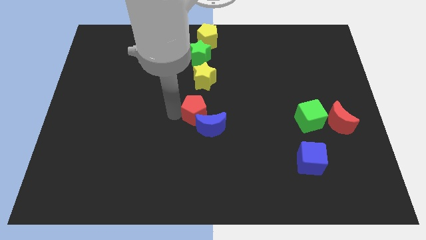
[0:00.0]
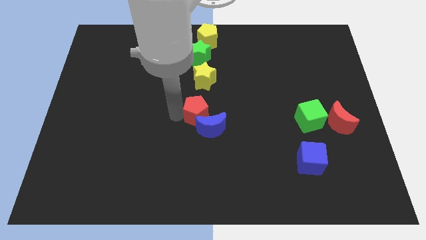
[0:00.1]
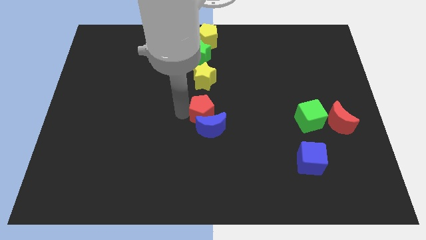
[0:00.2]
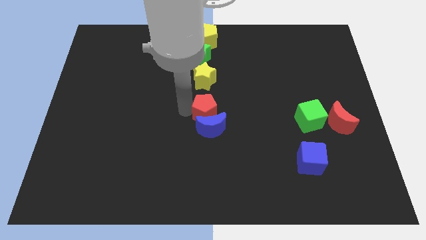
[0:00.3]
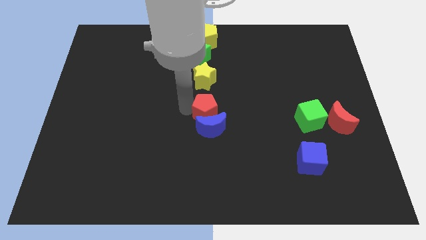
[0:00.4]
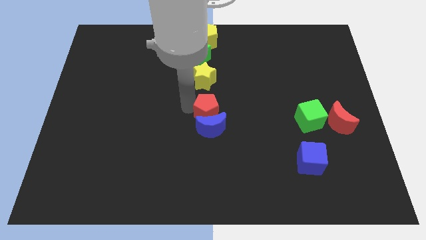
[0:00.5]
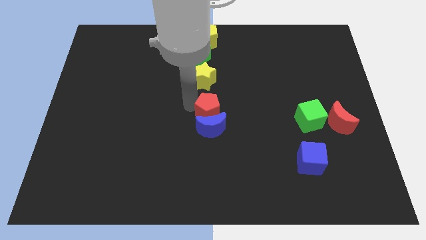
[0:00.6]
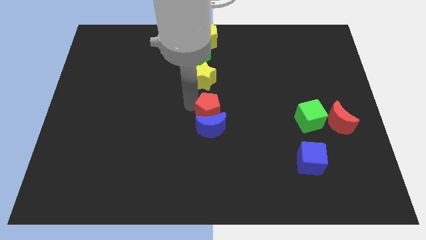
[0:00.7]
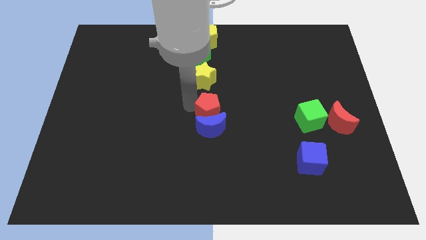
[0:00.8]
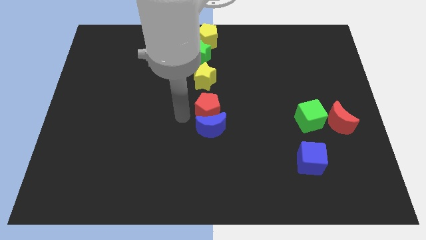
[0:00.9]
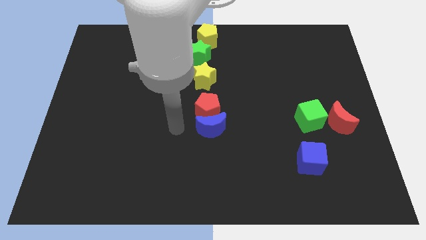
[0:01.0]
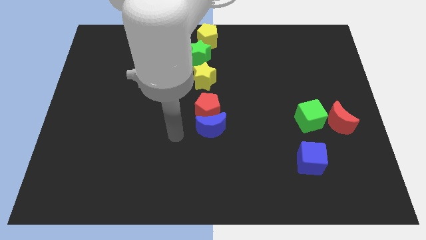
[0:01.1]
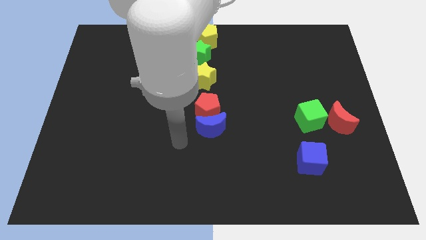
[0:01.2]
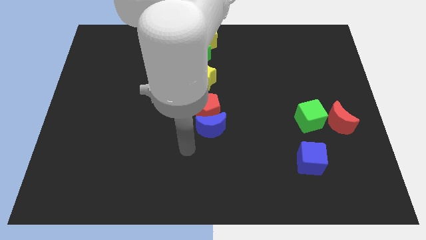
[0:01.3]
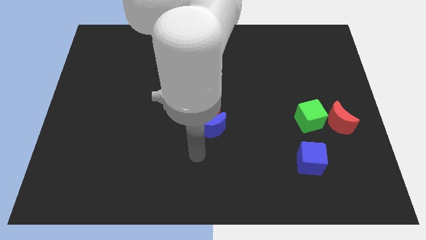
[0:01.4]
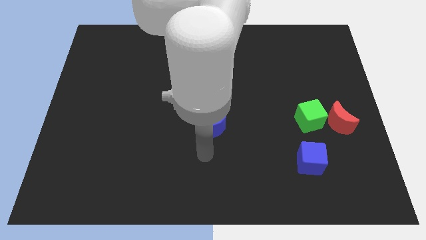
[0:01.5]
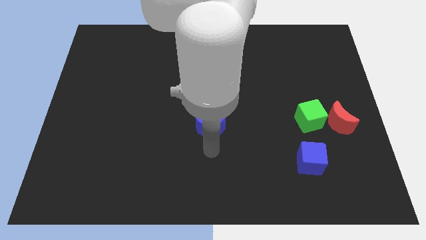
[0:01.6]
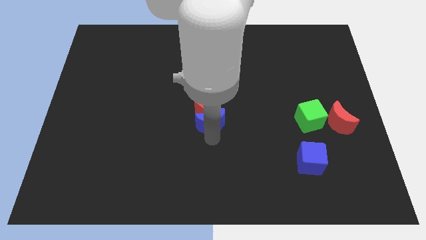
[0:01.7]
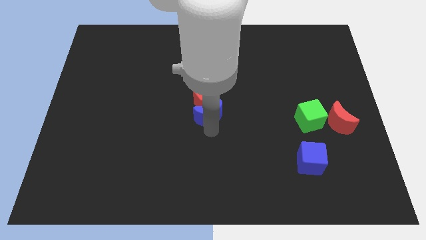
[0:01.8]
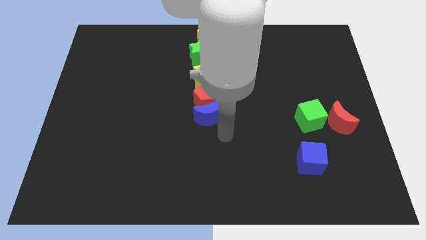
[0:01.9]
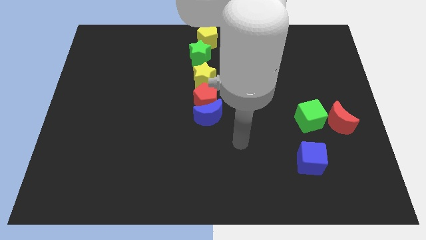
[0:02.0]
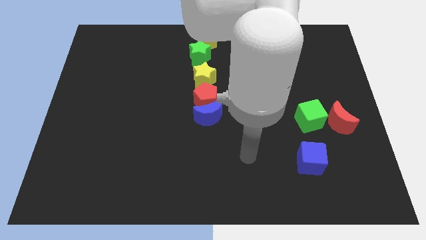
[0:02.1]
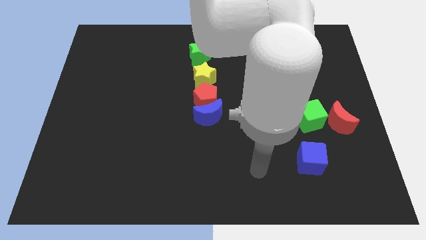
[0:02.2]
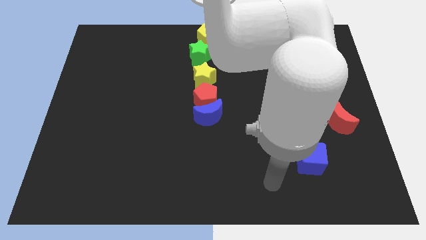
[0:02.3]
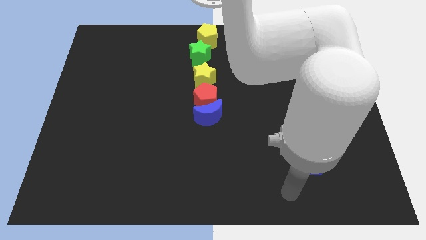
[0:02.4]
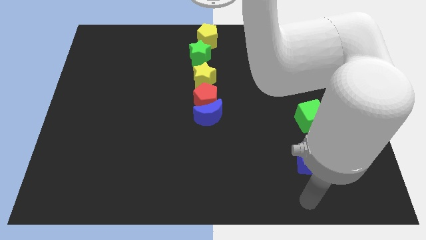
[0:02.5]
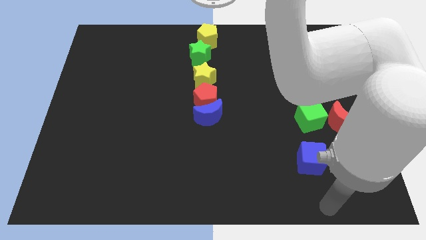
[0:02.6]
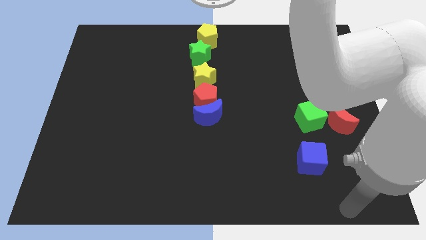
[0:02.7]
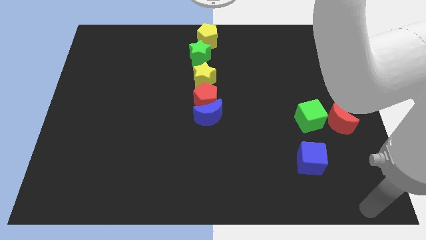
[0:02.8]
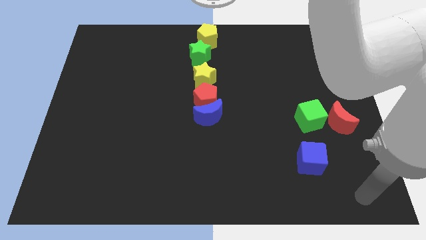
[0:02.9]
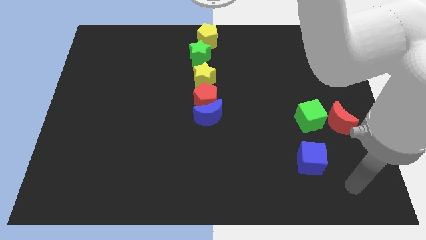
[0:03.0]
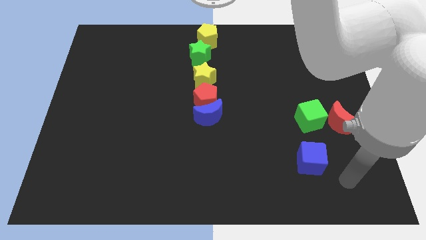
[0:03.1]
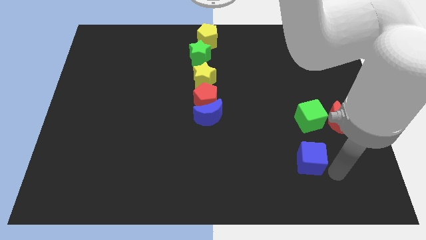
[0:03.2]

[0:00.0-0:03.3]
push the red pentagon and blue moon close to the bottom side of the yellow star

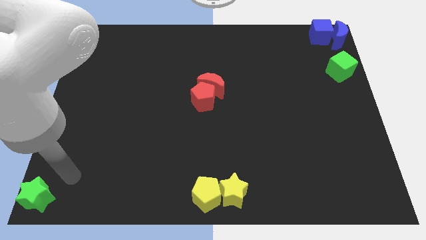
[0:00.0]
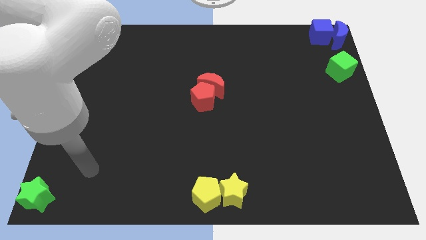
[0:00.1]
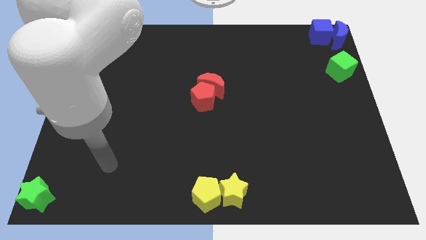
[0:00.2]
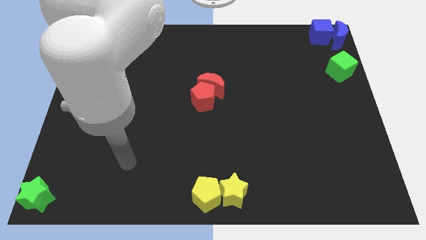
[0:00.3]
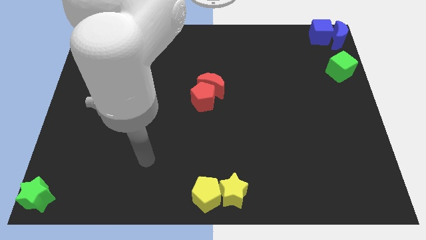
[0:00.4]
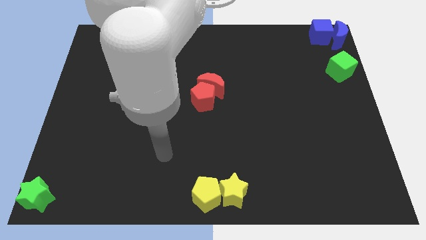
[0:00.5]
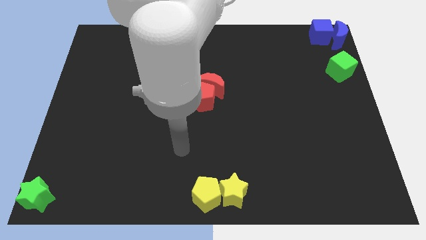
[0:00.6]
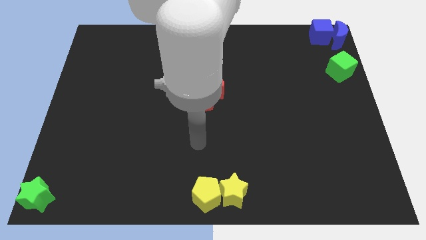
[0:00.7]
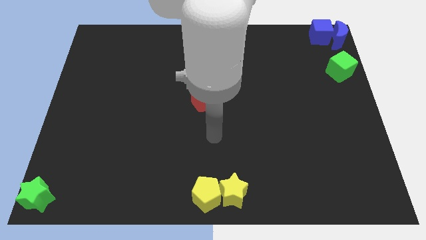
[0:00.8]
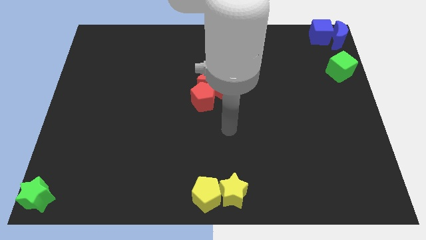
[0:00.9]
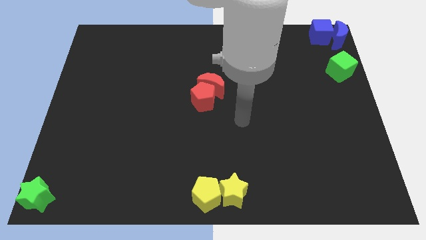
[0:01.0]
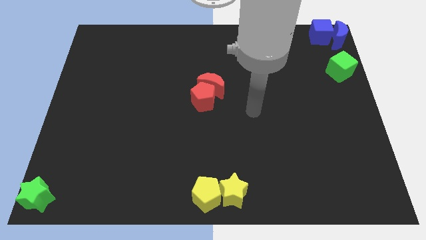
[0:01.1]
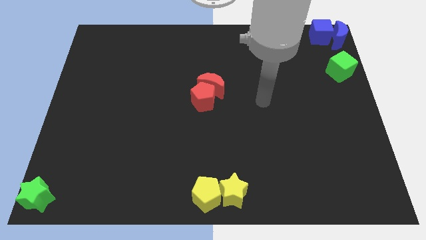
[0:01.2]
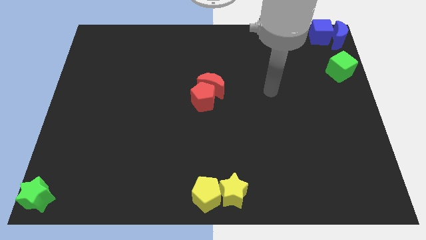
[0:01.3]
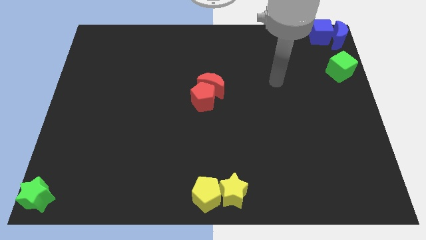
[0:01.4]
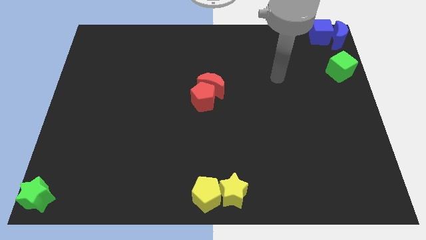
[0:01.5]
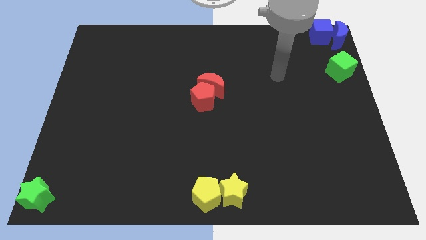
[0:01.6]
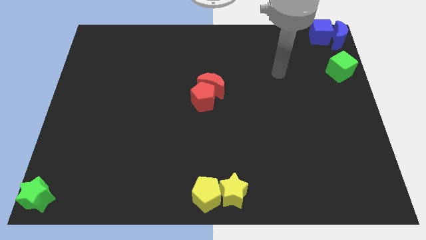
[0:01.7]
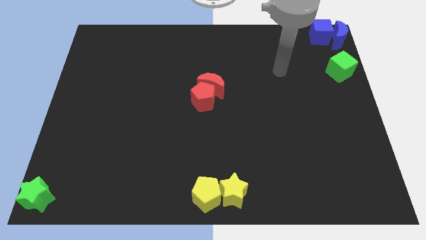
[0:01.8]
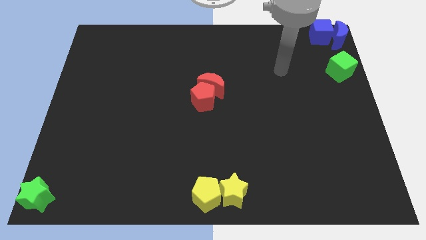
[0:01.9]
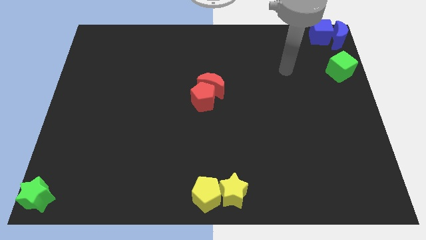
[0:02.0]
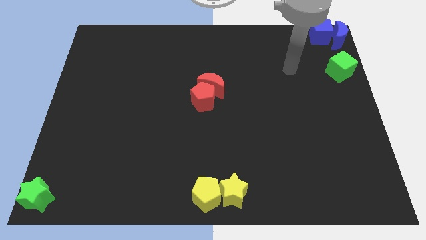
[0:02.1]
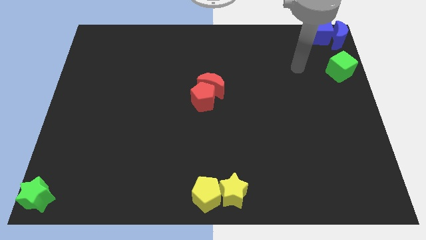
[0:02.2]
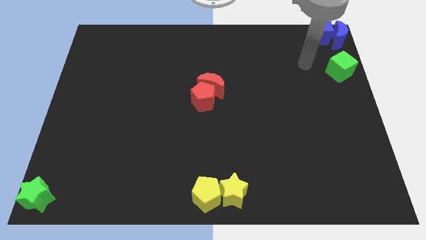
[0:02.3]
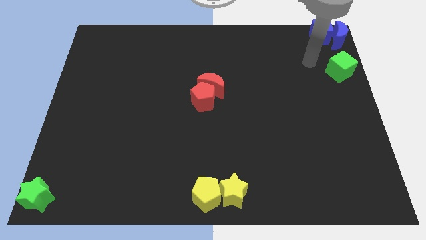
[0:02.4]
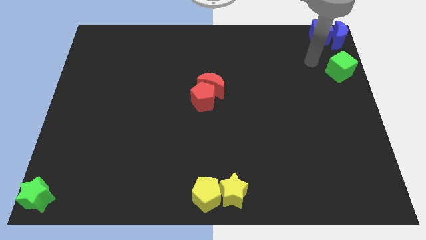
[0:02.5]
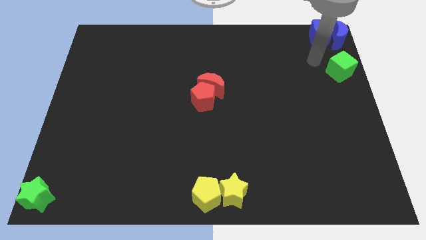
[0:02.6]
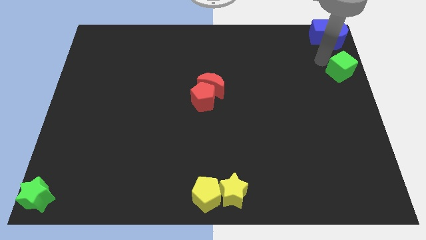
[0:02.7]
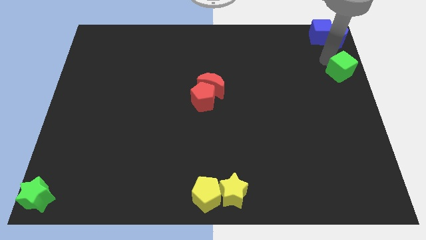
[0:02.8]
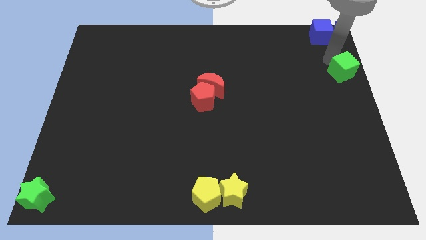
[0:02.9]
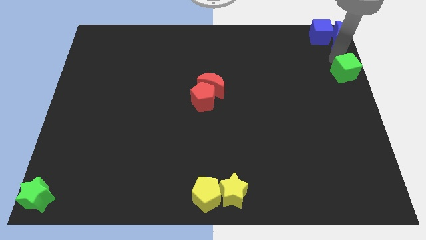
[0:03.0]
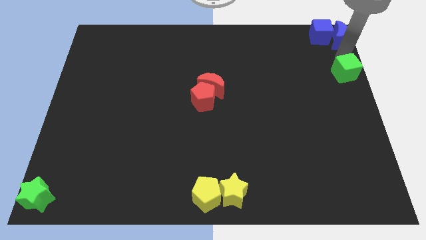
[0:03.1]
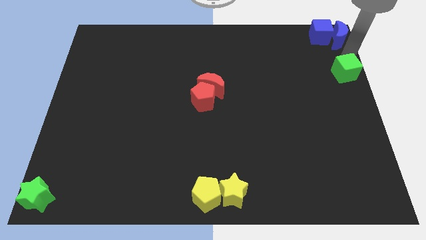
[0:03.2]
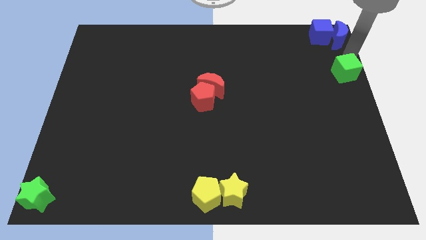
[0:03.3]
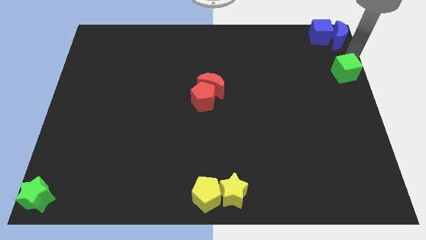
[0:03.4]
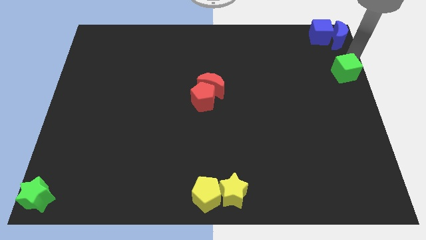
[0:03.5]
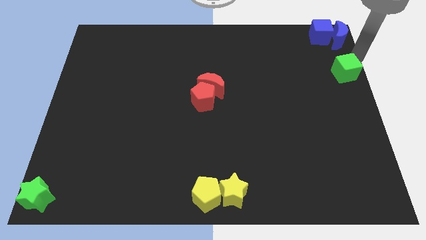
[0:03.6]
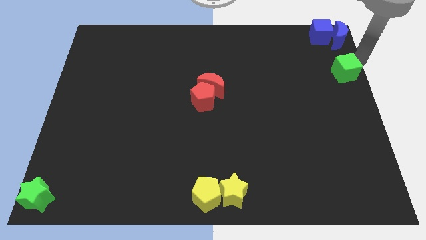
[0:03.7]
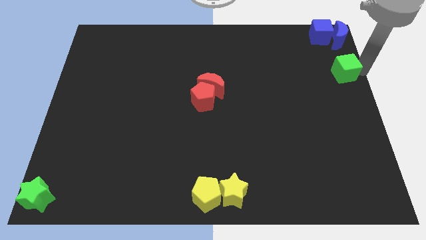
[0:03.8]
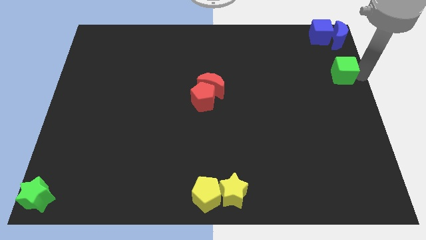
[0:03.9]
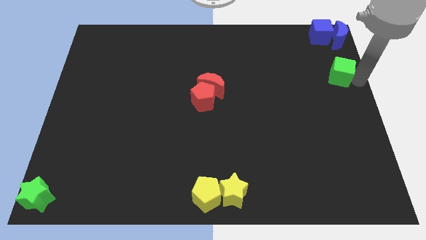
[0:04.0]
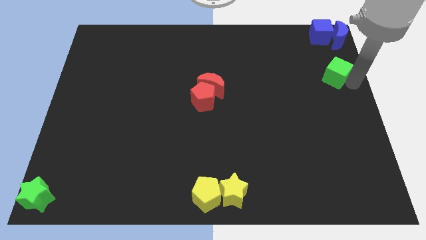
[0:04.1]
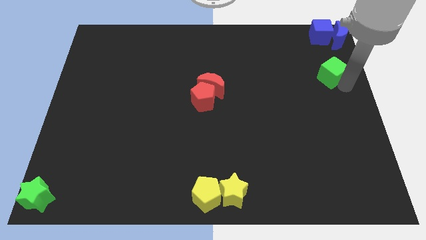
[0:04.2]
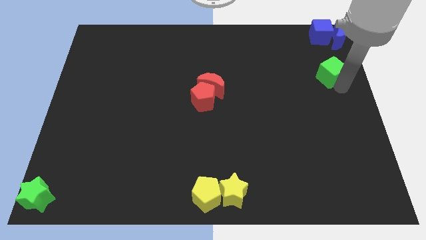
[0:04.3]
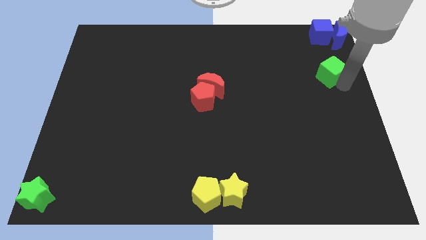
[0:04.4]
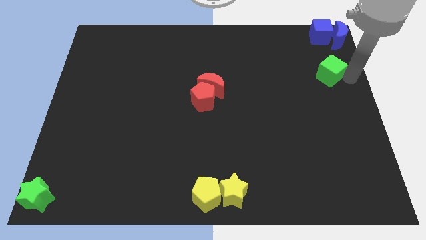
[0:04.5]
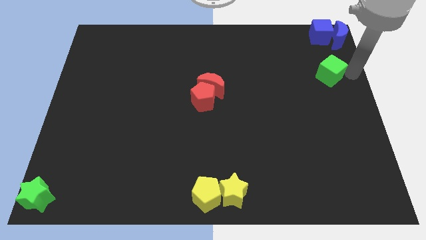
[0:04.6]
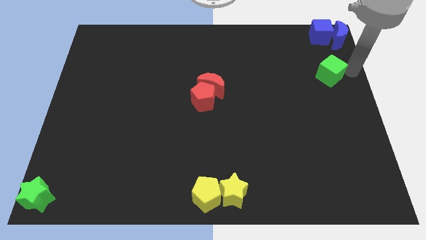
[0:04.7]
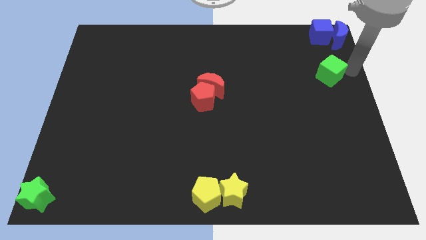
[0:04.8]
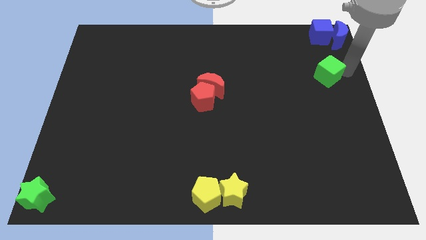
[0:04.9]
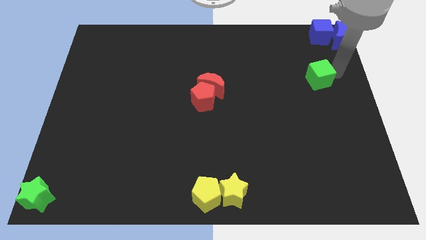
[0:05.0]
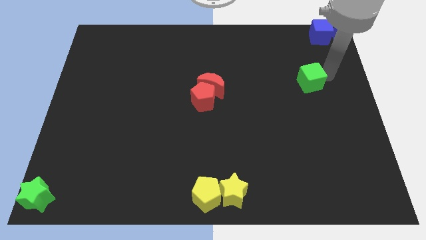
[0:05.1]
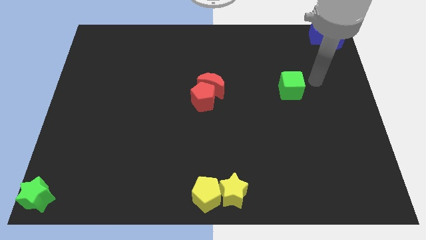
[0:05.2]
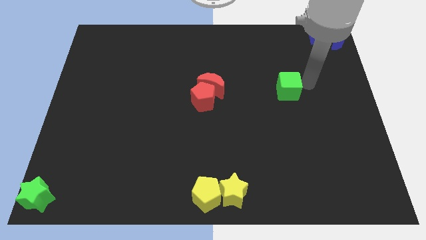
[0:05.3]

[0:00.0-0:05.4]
slide the green cube diagonally to the bottom left of the blue blocks

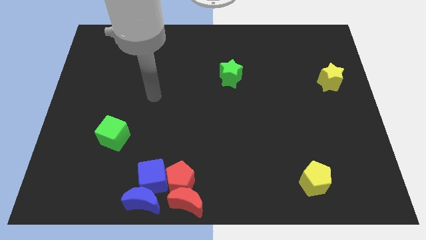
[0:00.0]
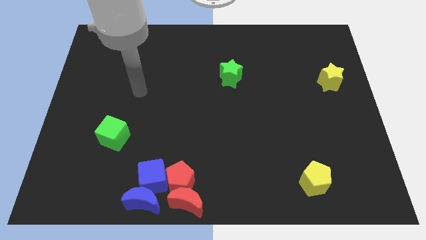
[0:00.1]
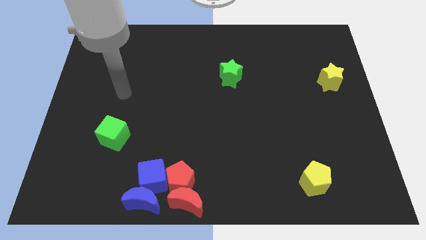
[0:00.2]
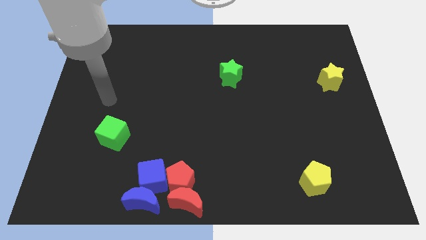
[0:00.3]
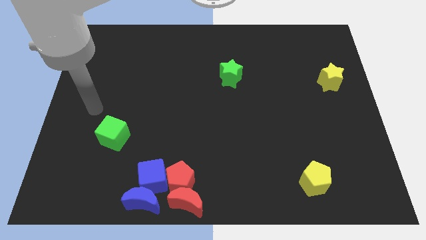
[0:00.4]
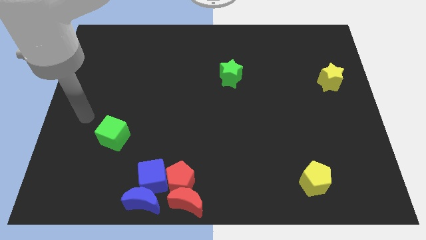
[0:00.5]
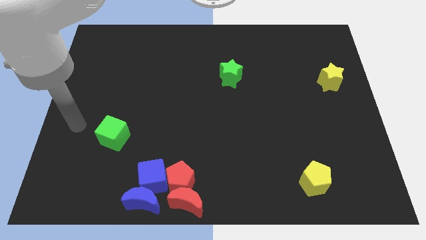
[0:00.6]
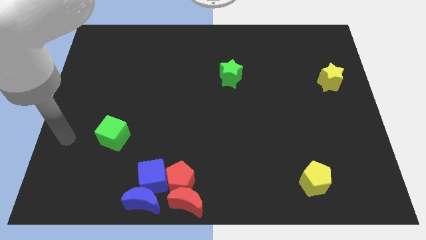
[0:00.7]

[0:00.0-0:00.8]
move the arm towards the left of the green cube
